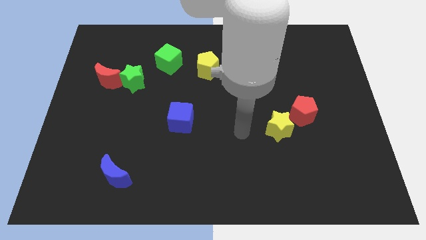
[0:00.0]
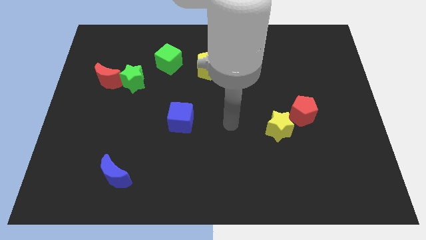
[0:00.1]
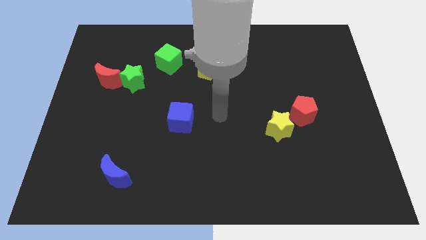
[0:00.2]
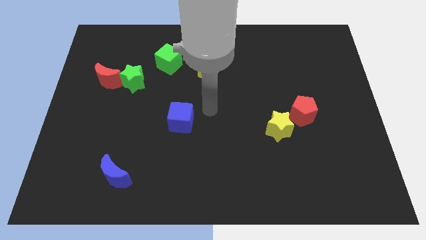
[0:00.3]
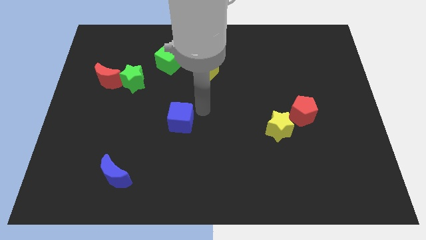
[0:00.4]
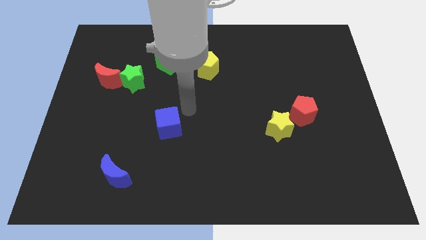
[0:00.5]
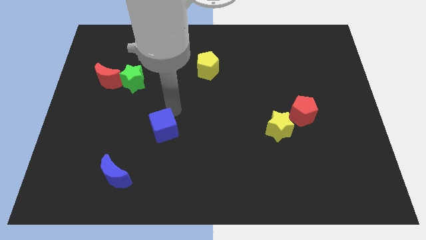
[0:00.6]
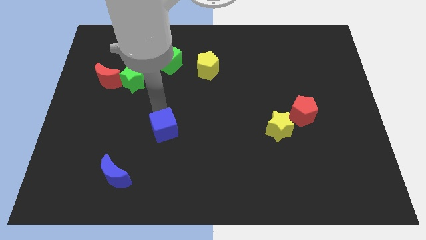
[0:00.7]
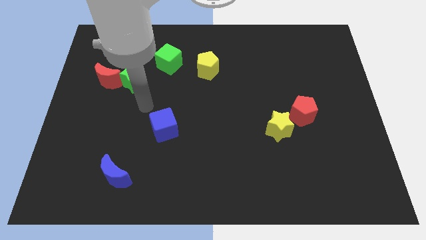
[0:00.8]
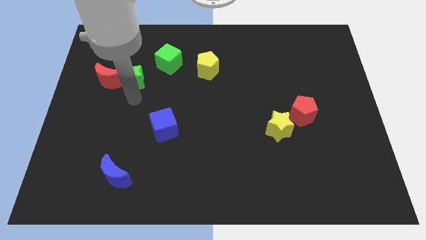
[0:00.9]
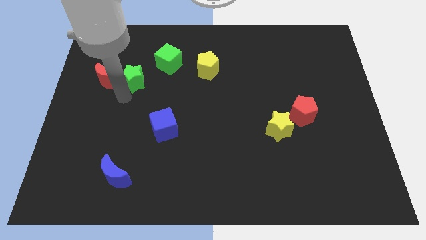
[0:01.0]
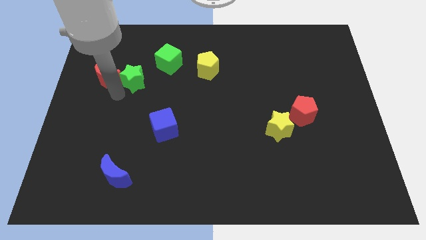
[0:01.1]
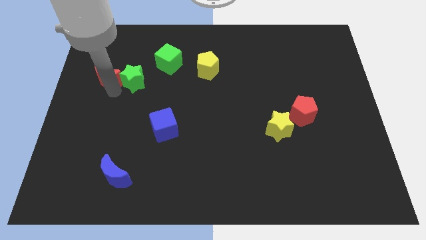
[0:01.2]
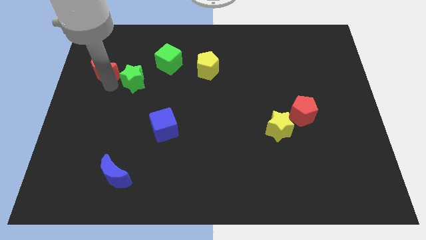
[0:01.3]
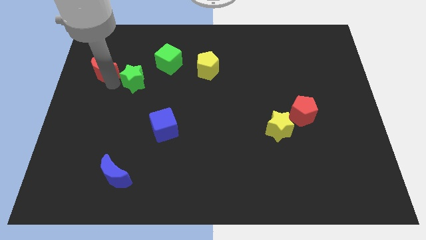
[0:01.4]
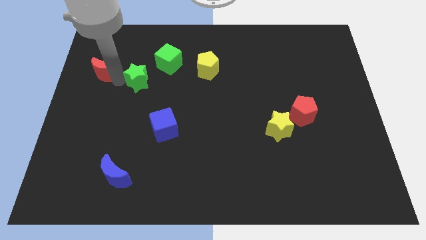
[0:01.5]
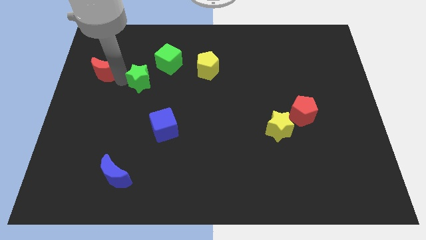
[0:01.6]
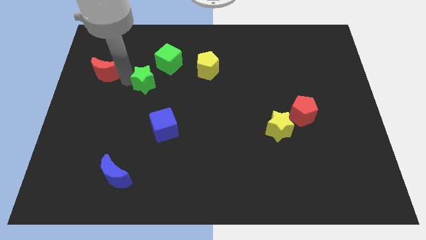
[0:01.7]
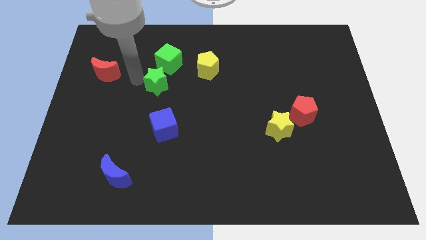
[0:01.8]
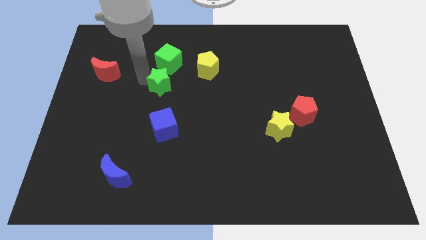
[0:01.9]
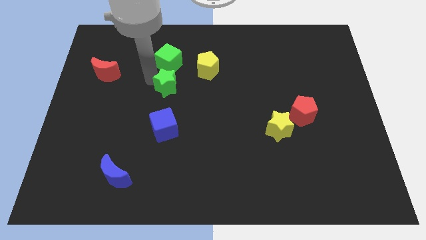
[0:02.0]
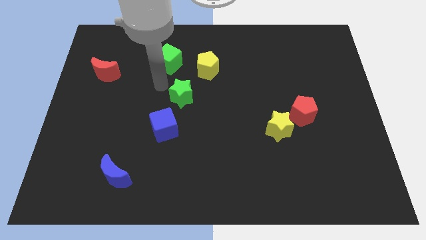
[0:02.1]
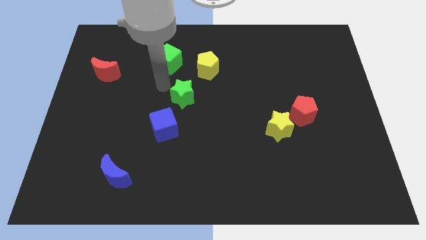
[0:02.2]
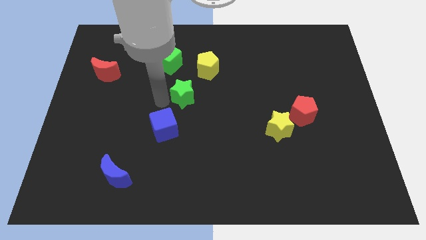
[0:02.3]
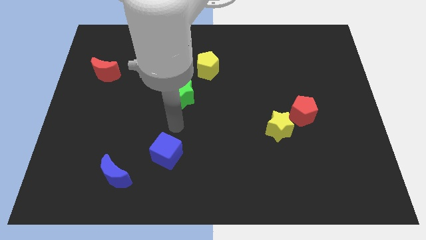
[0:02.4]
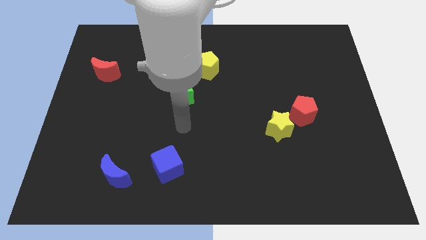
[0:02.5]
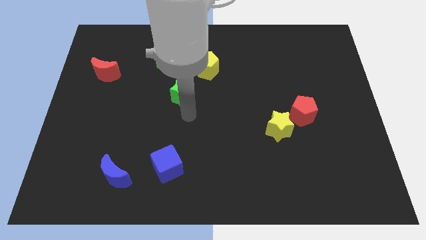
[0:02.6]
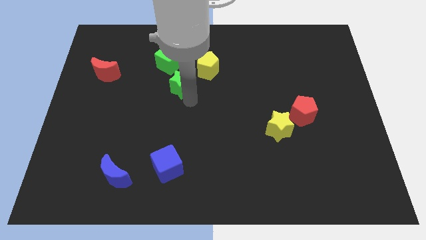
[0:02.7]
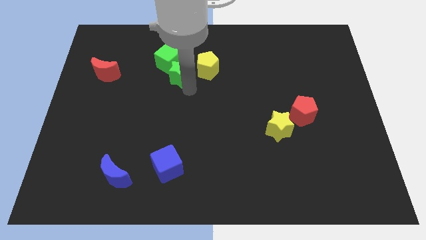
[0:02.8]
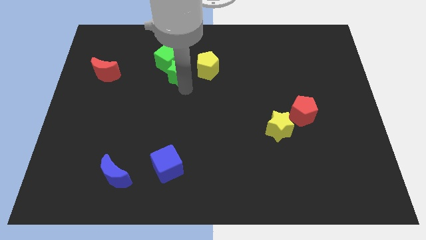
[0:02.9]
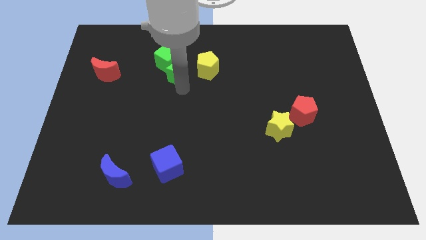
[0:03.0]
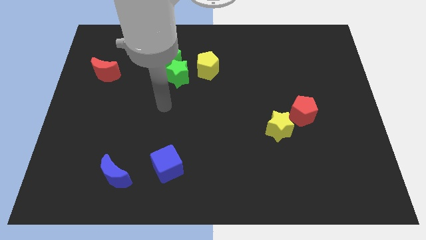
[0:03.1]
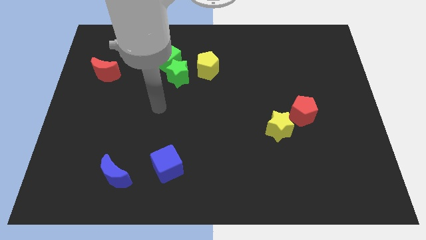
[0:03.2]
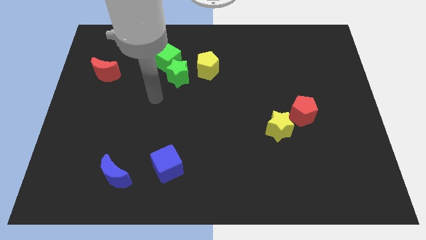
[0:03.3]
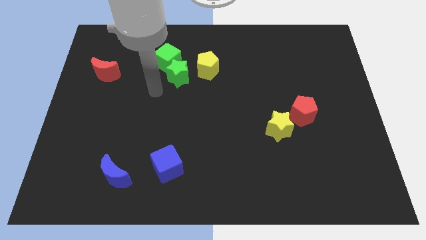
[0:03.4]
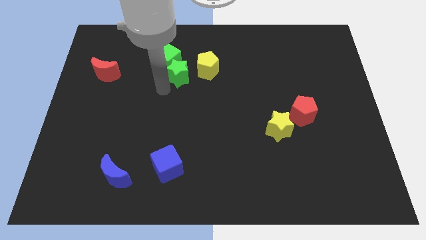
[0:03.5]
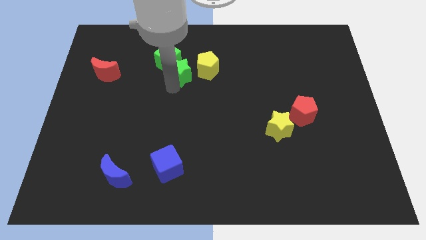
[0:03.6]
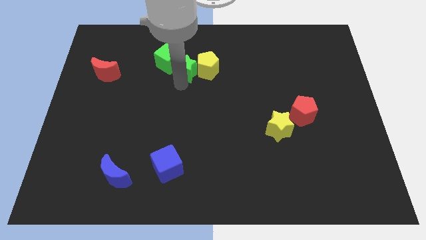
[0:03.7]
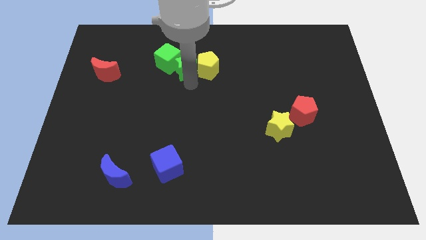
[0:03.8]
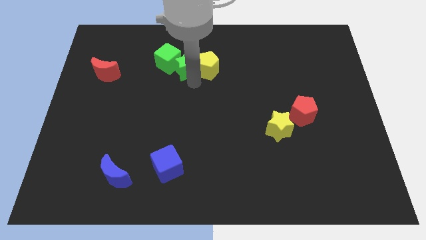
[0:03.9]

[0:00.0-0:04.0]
slide the green star to the yellow pentagon

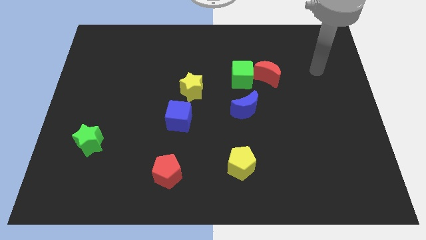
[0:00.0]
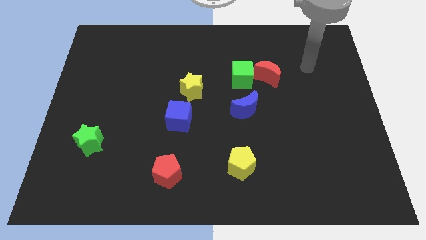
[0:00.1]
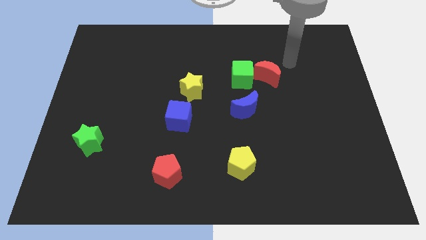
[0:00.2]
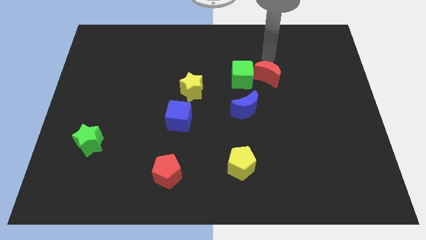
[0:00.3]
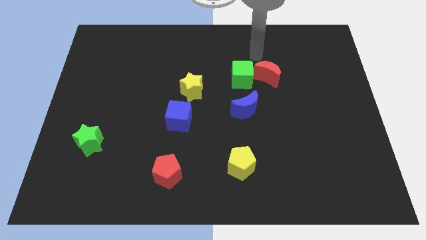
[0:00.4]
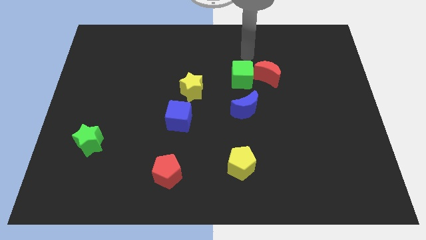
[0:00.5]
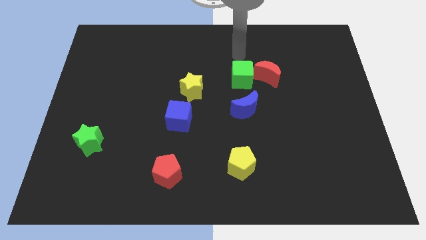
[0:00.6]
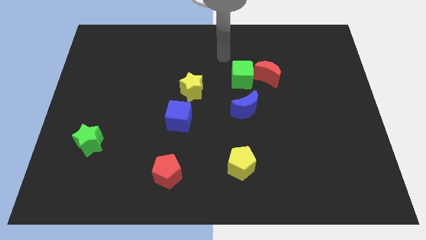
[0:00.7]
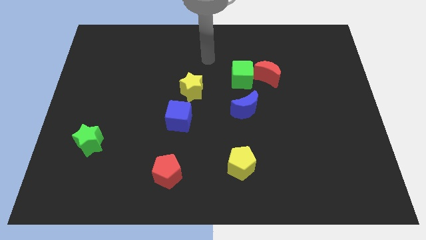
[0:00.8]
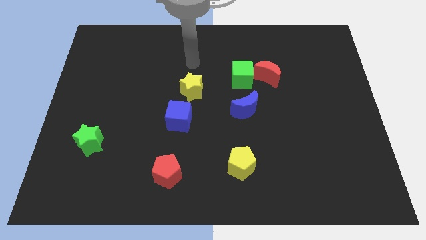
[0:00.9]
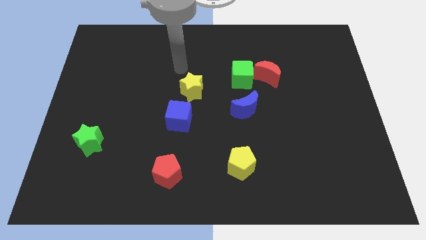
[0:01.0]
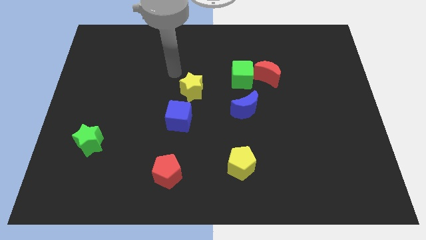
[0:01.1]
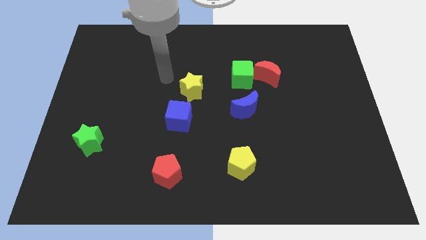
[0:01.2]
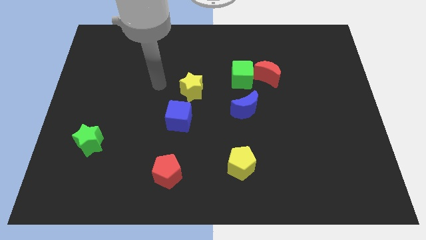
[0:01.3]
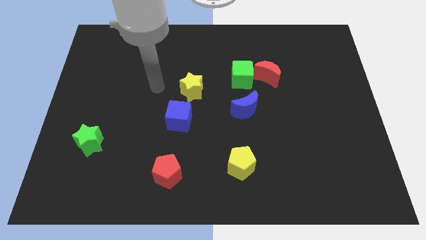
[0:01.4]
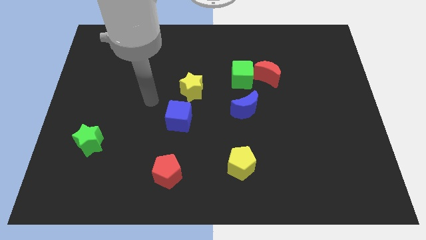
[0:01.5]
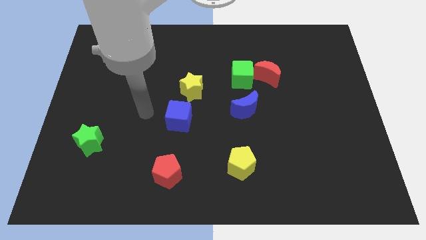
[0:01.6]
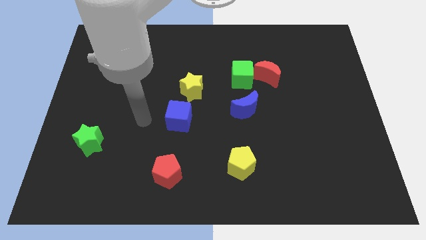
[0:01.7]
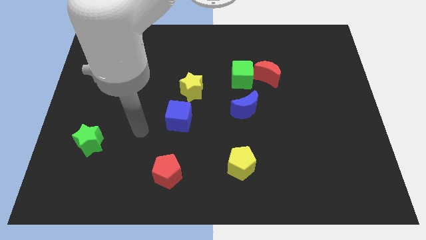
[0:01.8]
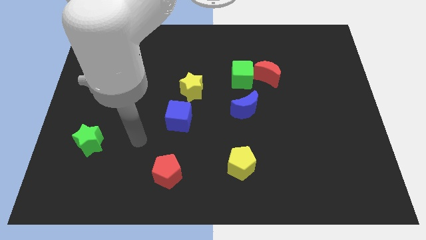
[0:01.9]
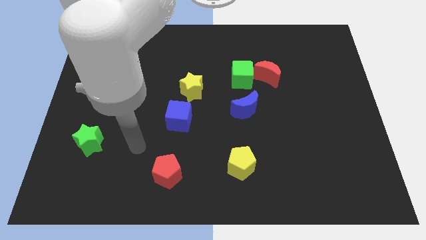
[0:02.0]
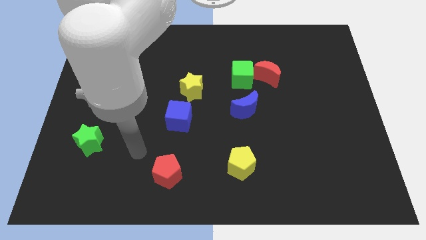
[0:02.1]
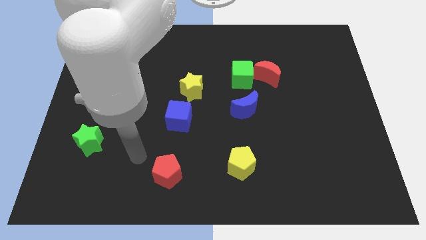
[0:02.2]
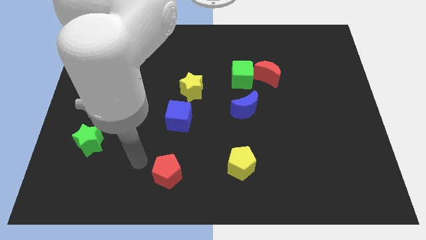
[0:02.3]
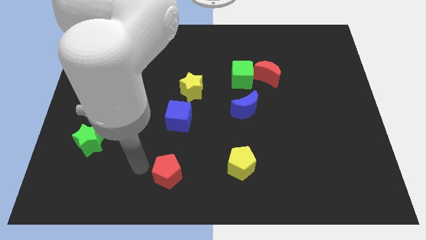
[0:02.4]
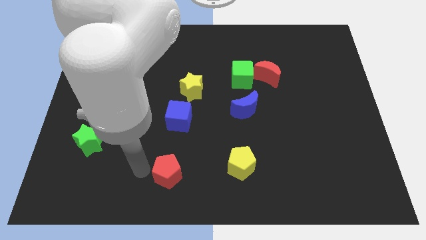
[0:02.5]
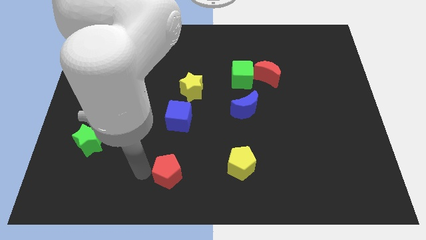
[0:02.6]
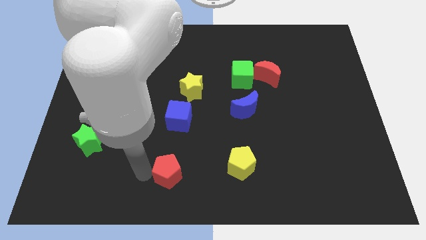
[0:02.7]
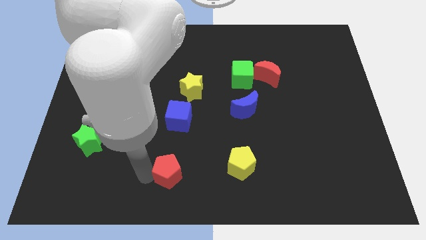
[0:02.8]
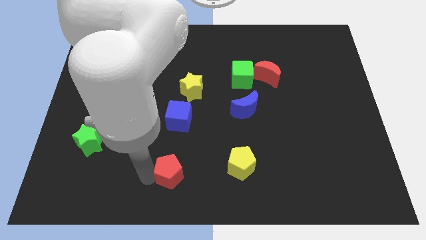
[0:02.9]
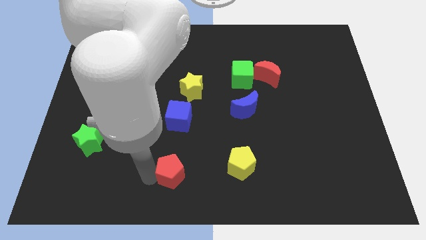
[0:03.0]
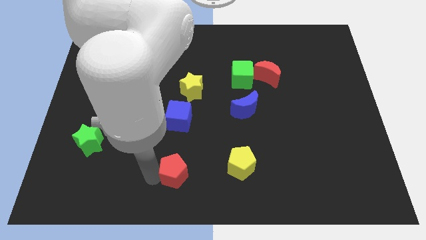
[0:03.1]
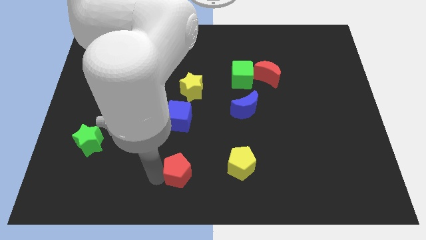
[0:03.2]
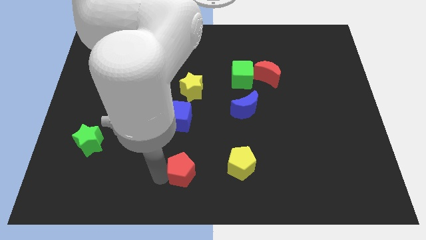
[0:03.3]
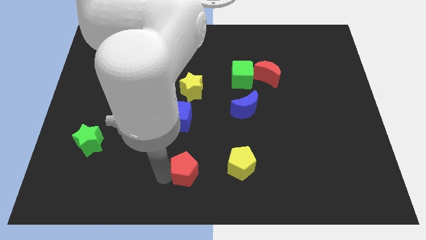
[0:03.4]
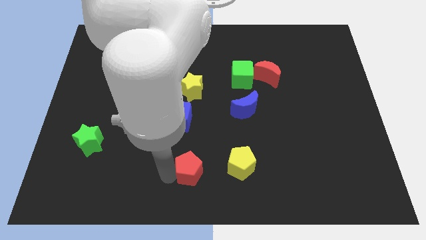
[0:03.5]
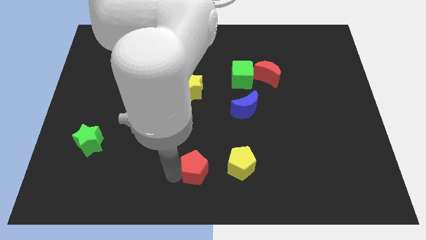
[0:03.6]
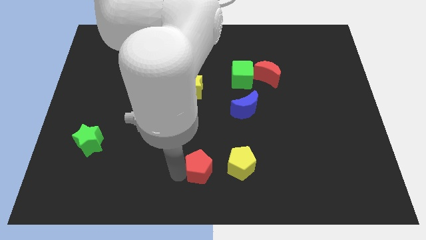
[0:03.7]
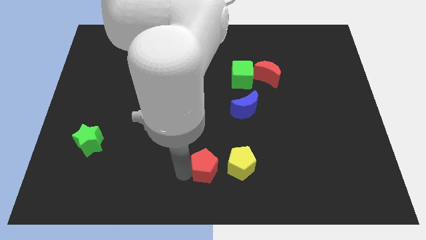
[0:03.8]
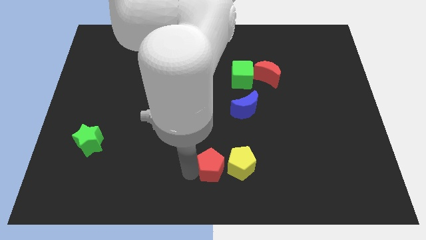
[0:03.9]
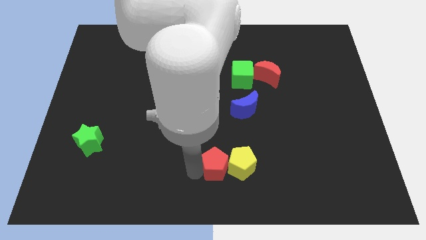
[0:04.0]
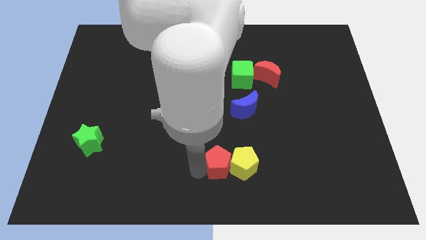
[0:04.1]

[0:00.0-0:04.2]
move the red pentagon close to the yellow pentagon

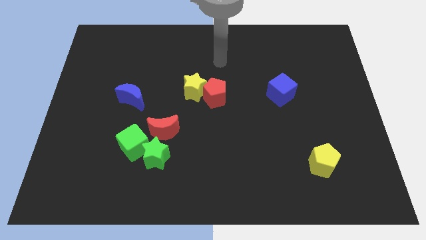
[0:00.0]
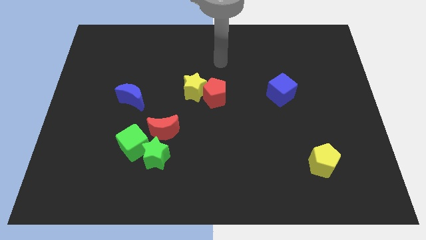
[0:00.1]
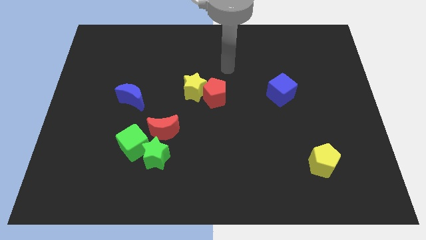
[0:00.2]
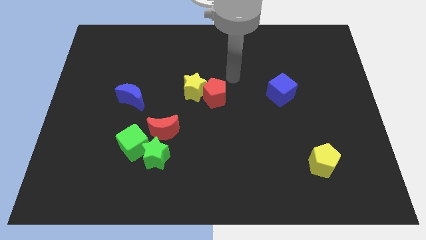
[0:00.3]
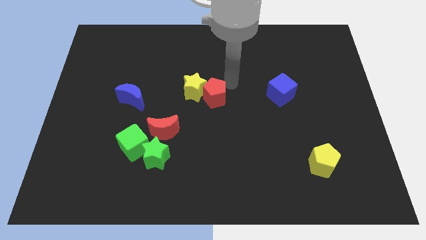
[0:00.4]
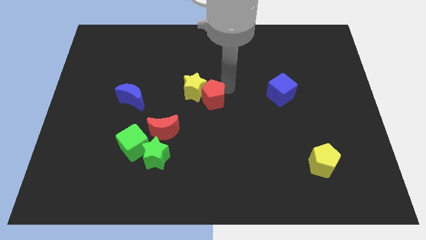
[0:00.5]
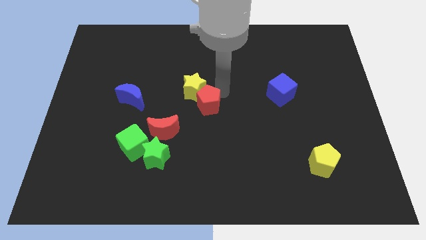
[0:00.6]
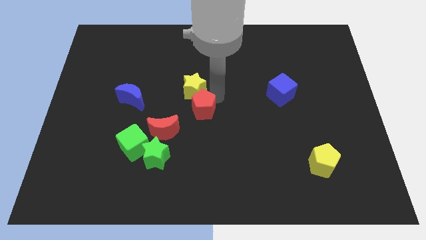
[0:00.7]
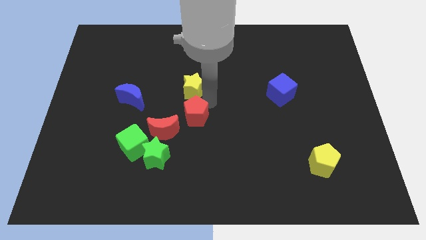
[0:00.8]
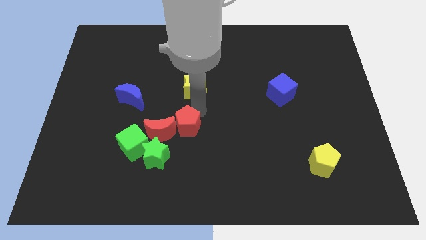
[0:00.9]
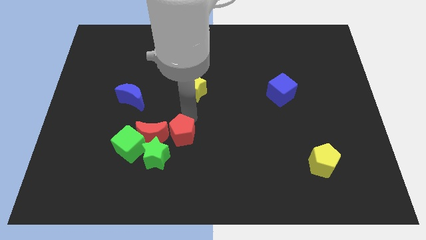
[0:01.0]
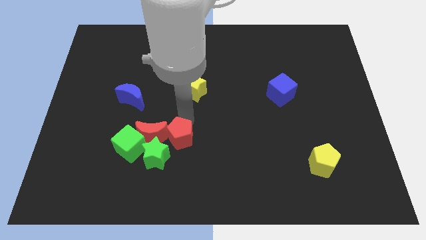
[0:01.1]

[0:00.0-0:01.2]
push the red pentagon close to the red moon
